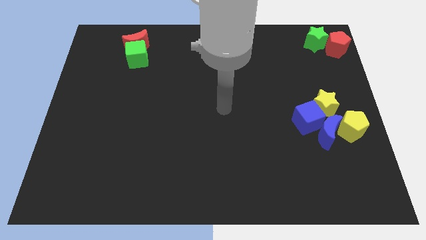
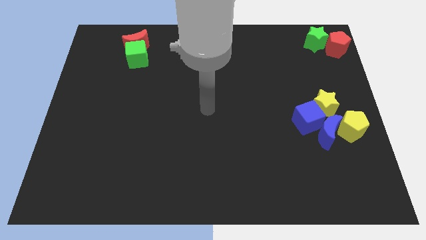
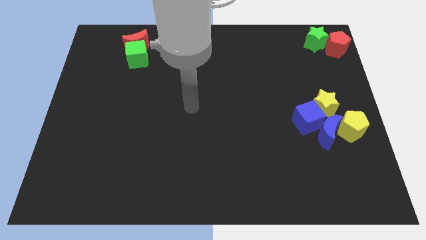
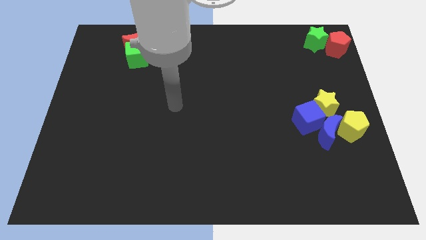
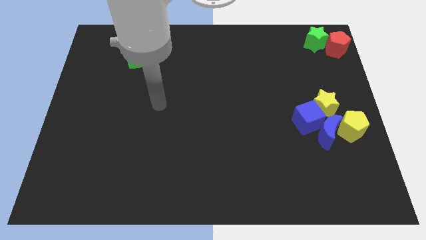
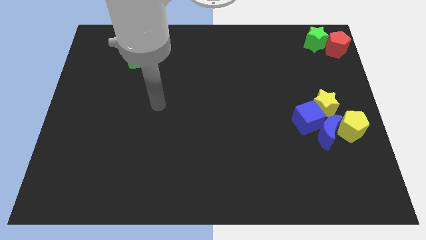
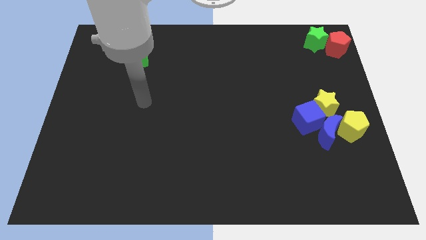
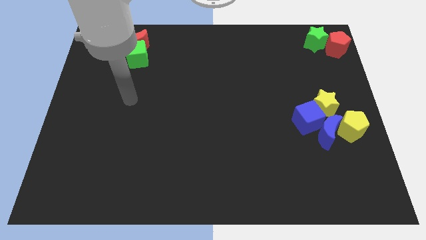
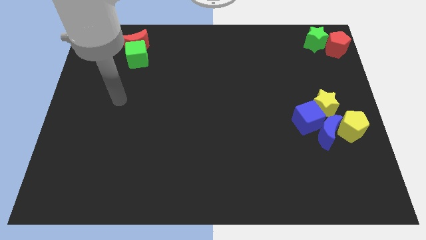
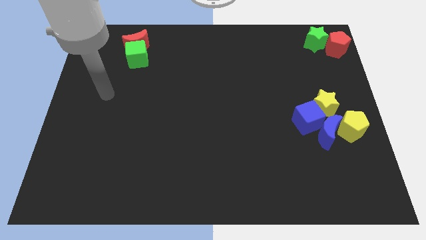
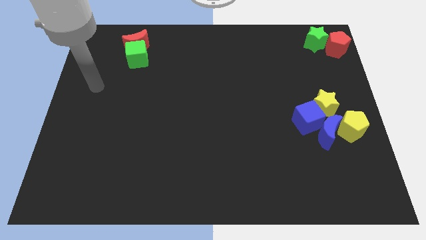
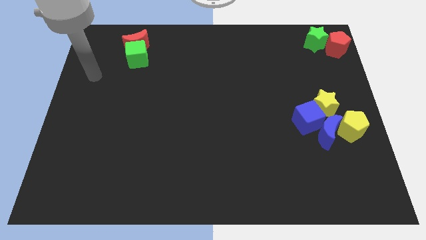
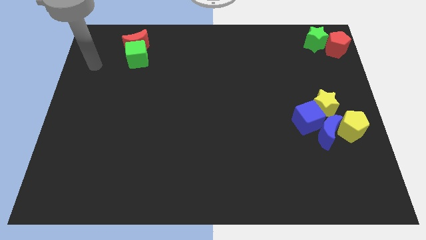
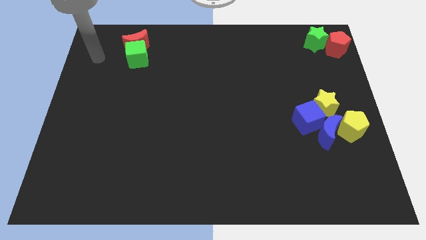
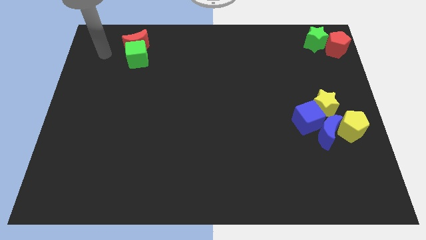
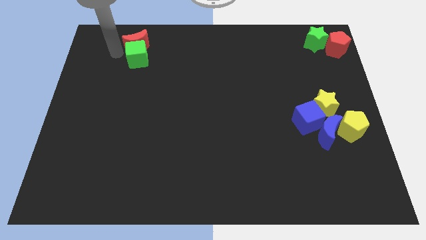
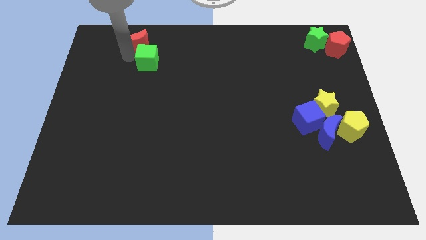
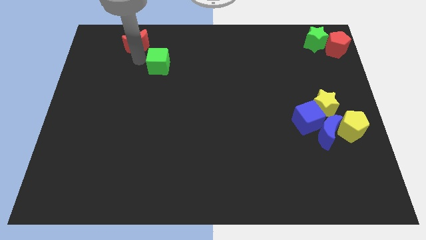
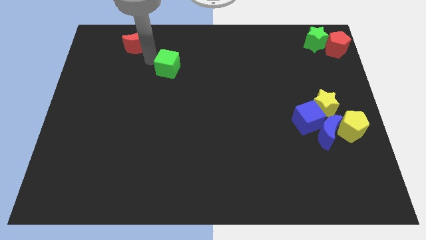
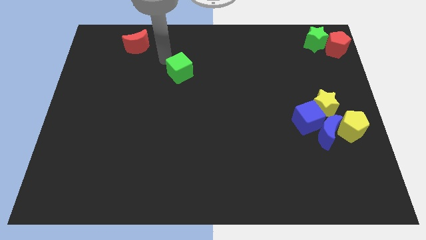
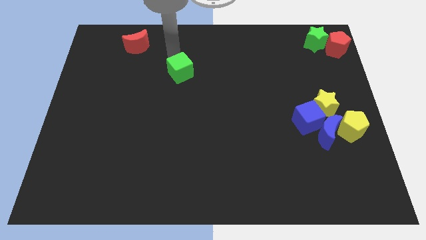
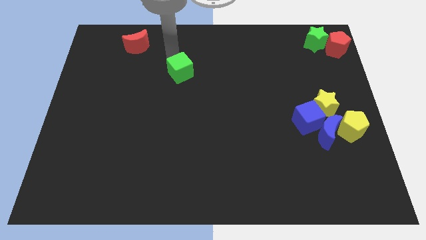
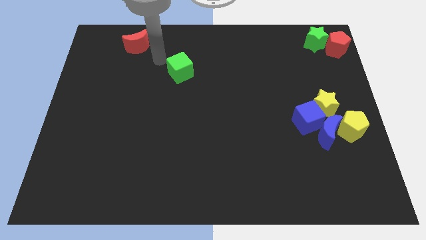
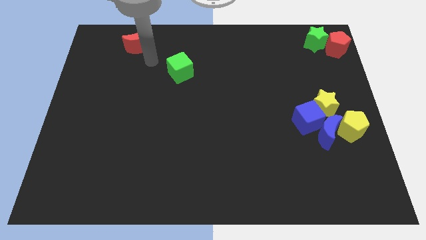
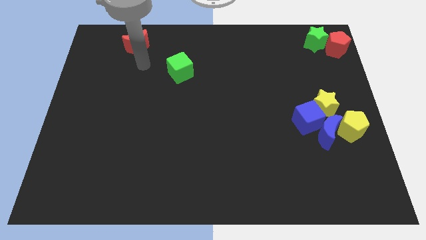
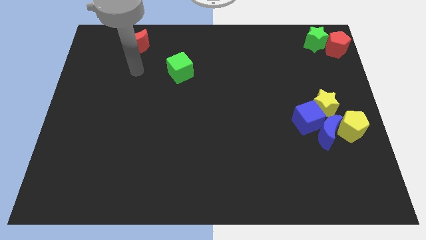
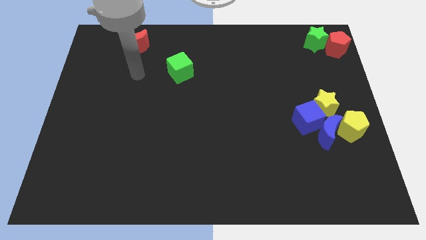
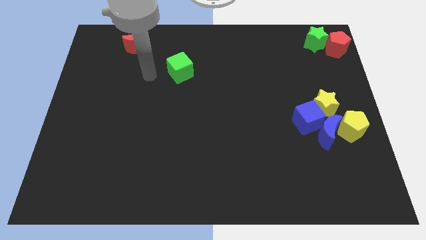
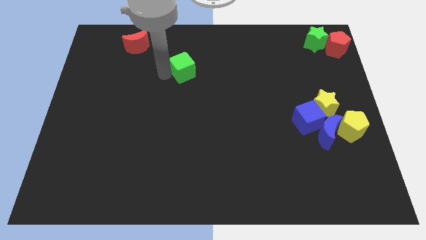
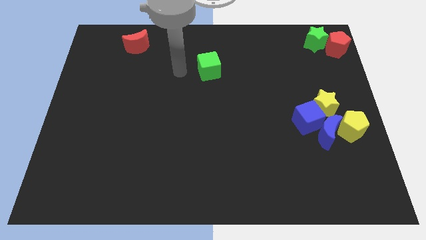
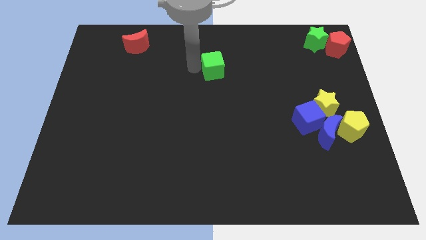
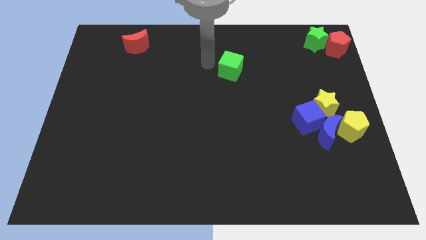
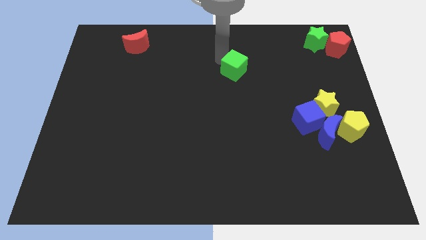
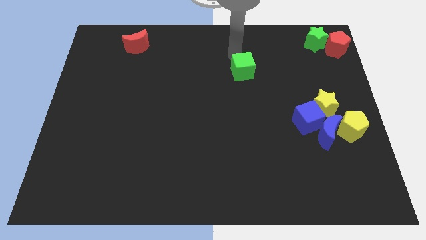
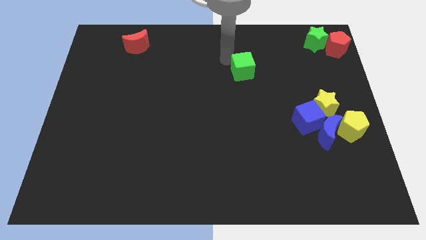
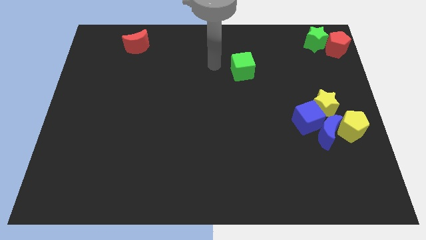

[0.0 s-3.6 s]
push the green cube away from the red crescent

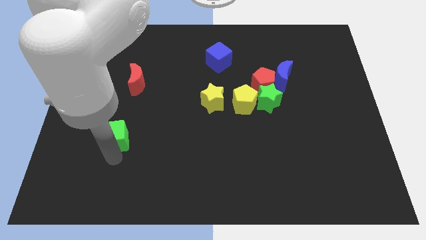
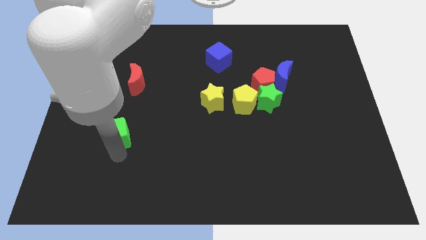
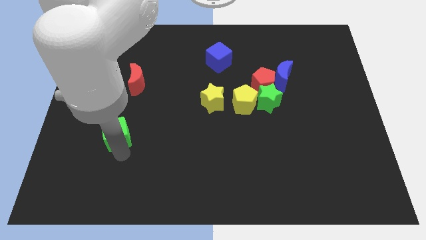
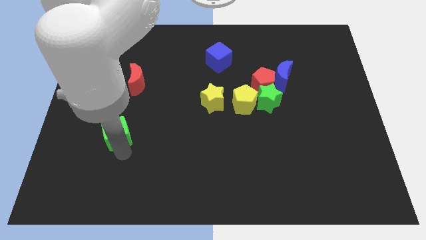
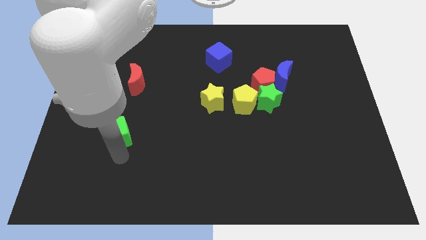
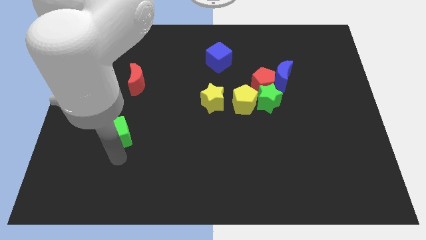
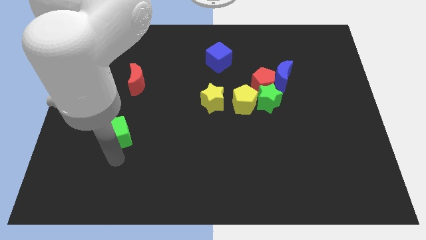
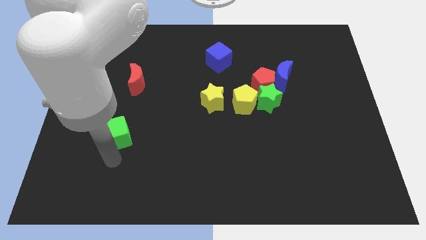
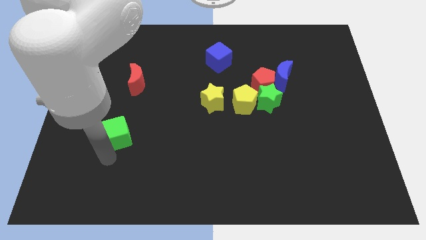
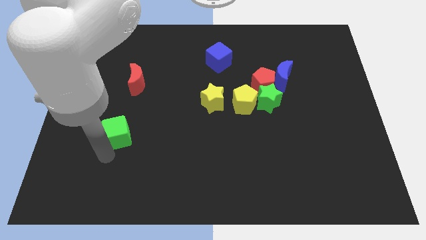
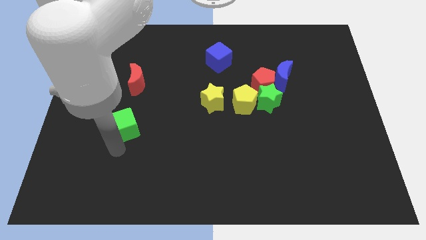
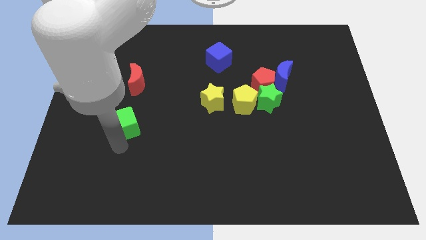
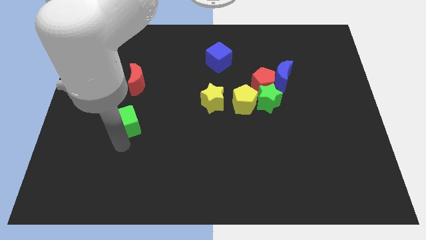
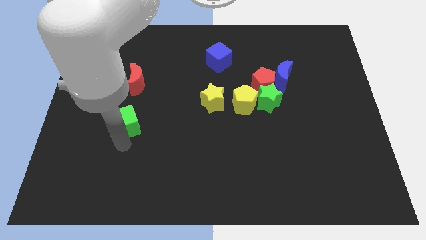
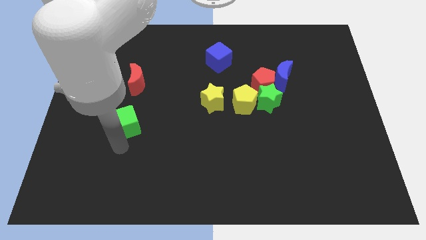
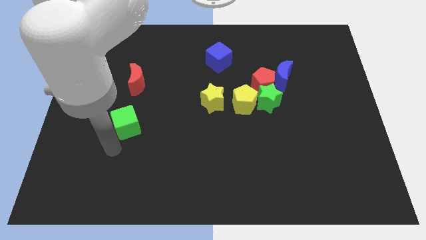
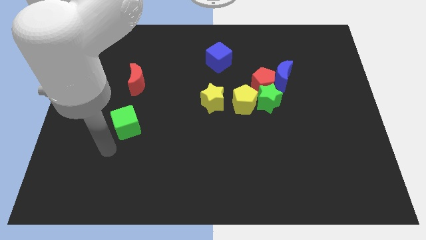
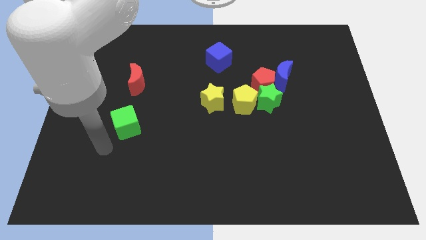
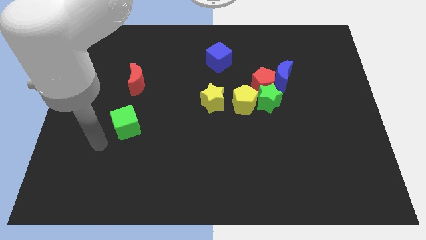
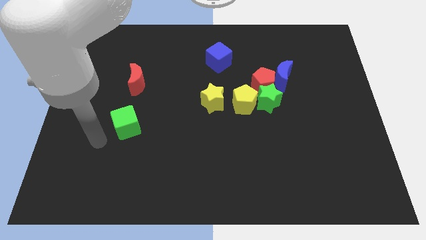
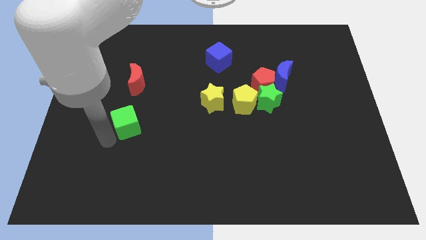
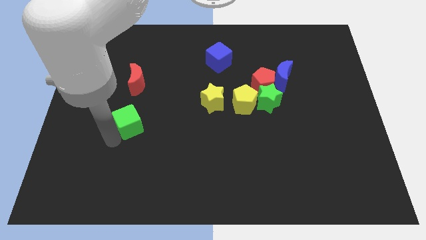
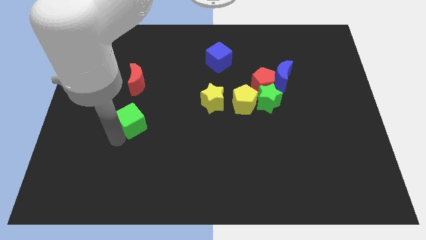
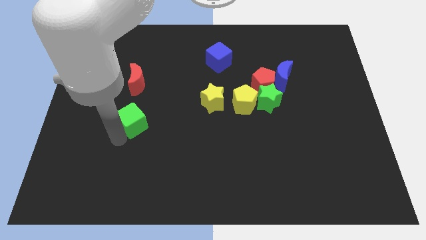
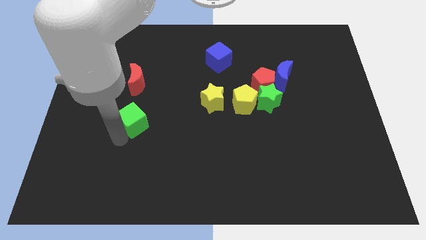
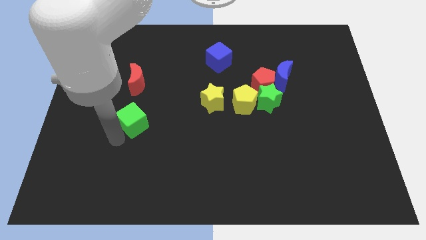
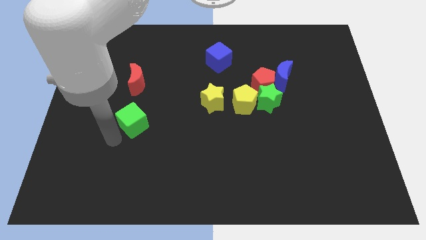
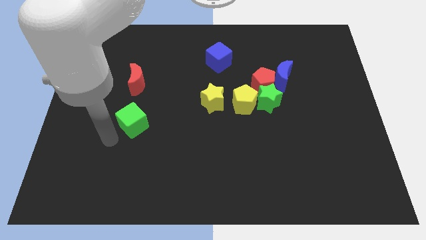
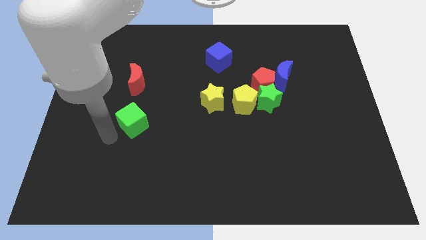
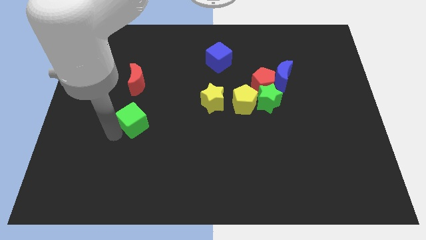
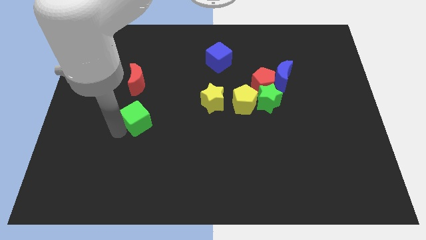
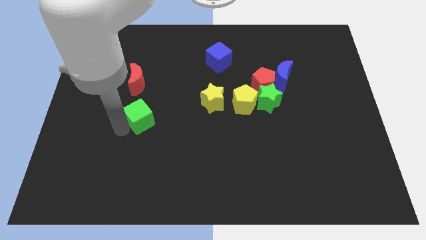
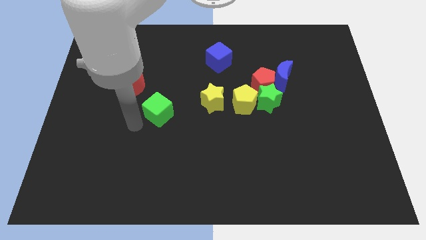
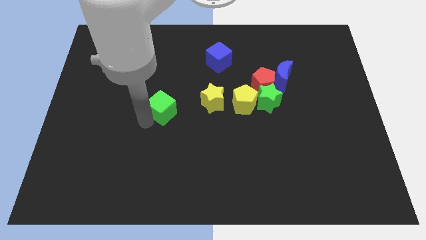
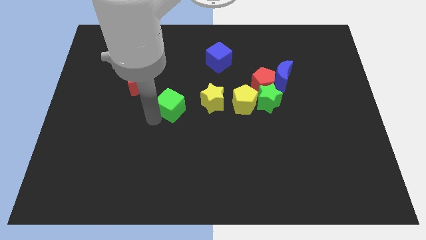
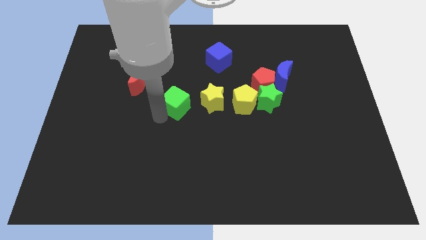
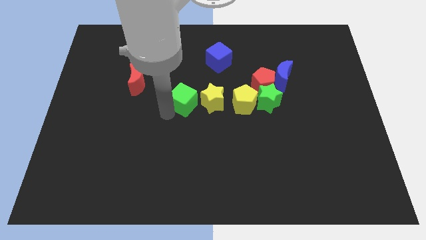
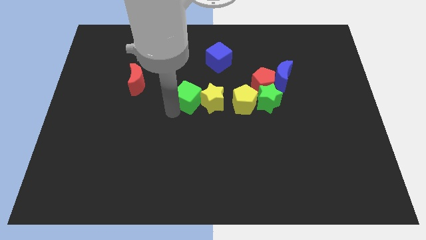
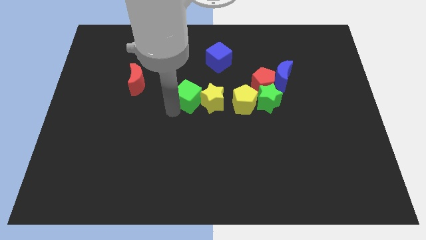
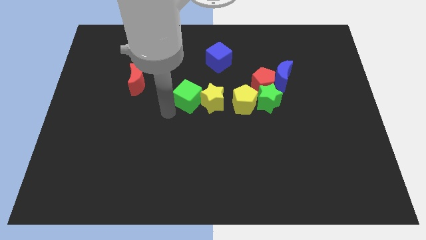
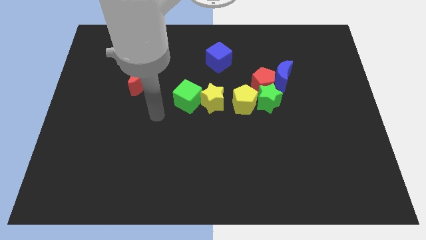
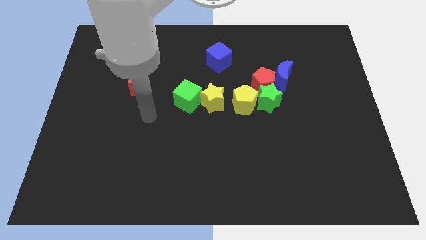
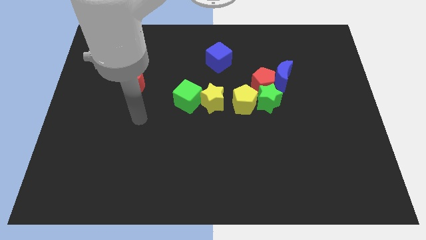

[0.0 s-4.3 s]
push the green cube into the yellow star

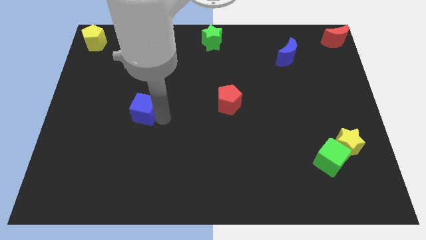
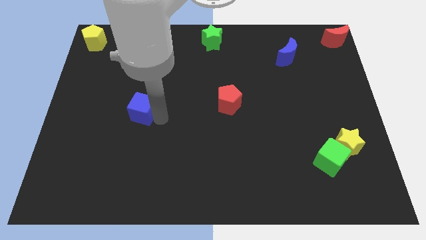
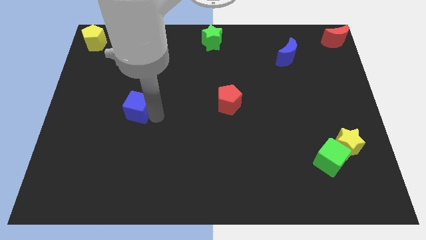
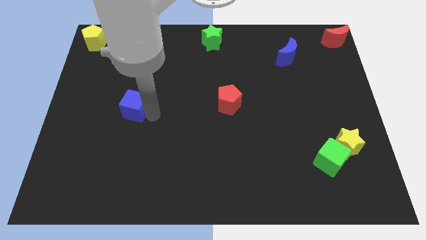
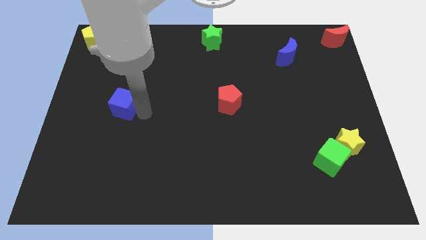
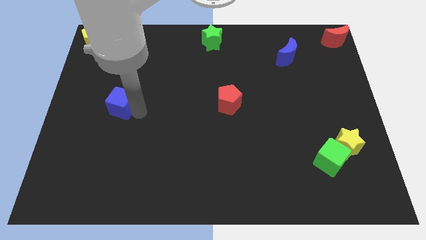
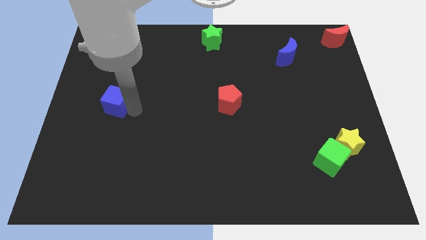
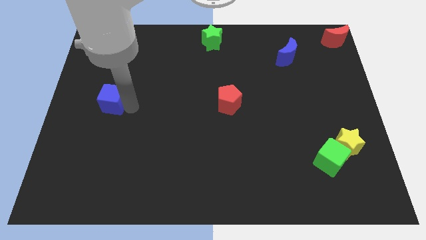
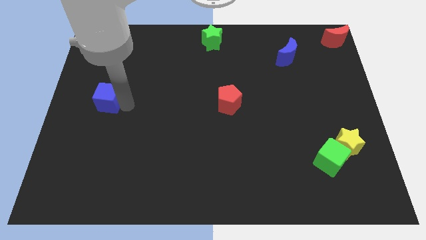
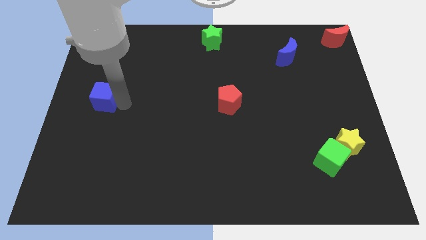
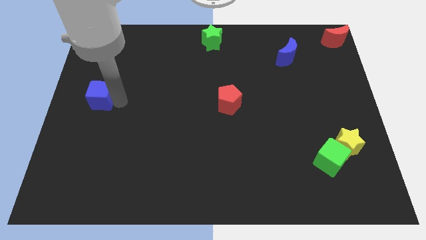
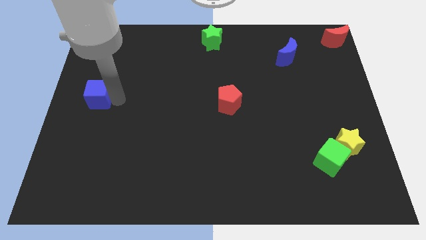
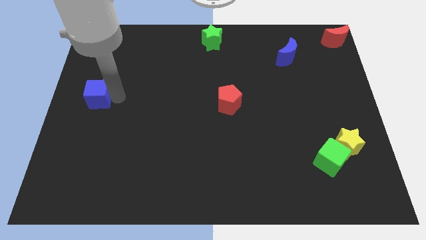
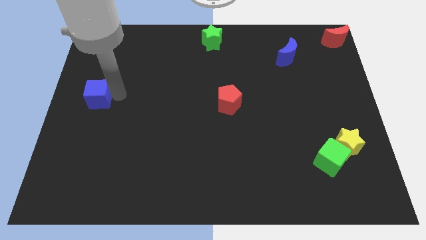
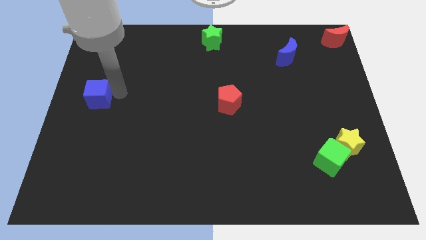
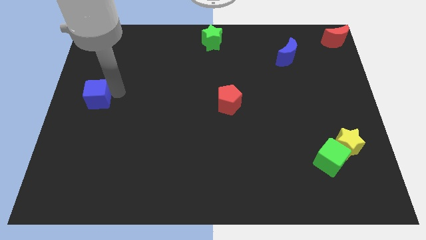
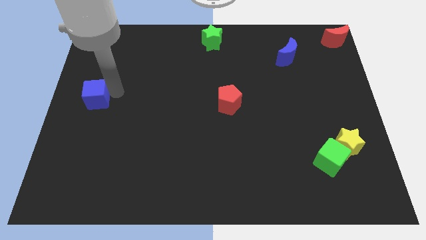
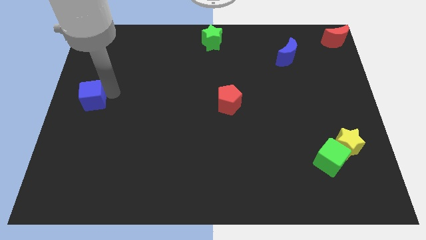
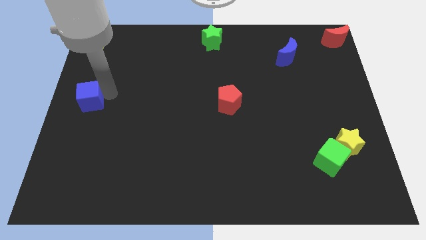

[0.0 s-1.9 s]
place blue cube vertically to the bottom of the yellow pentagon
